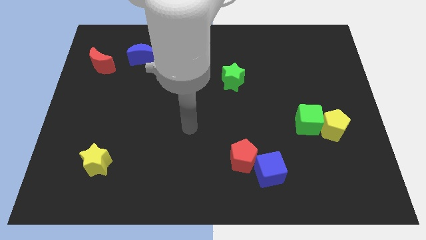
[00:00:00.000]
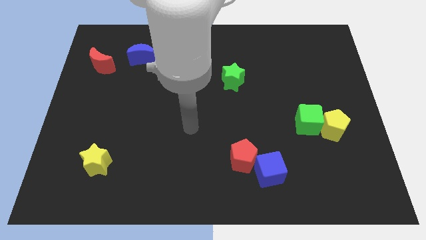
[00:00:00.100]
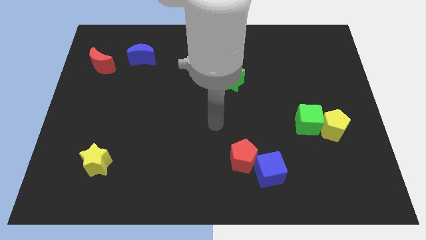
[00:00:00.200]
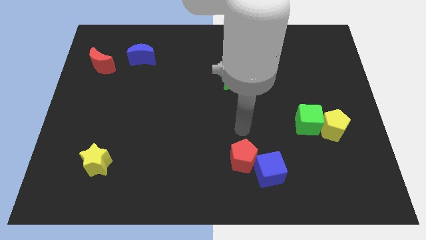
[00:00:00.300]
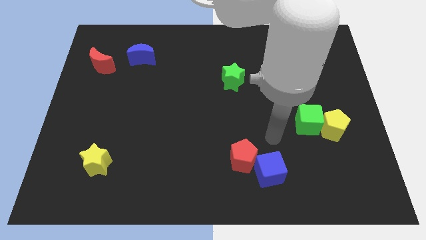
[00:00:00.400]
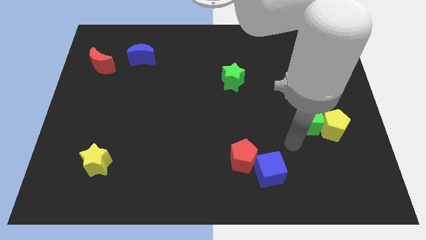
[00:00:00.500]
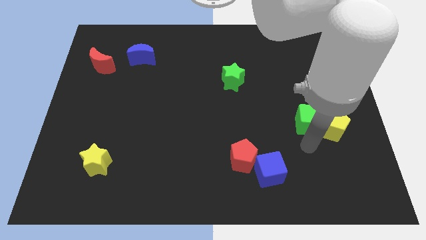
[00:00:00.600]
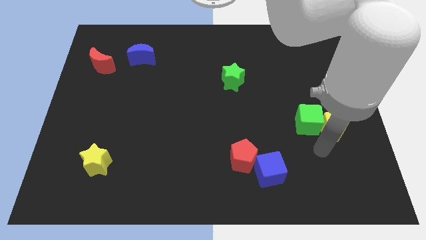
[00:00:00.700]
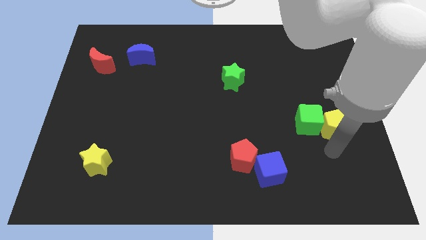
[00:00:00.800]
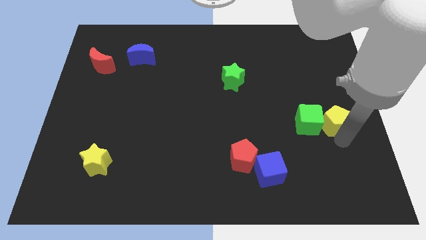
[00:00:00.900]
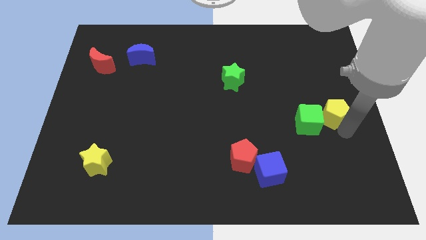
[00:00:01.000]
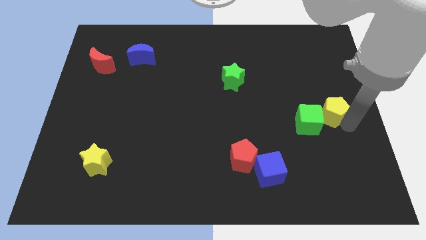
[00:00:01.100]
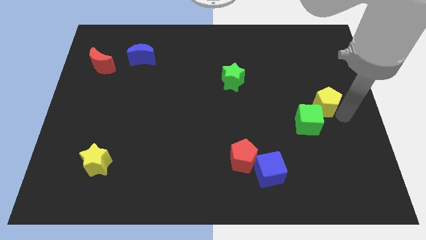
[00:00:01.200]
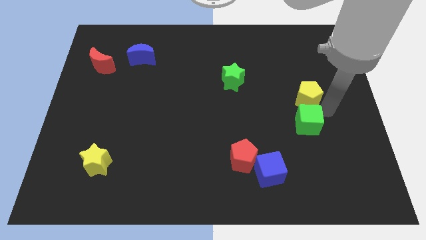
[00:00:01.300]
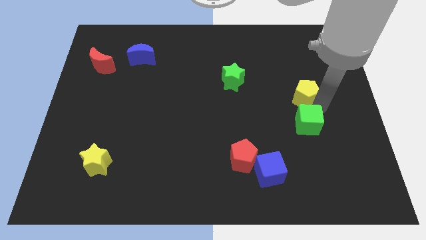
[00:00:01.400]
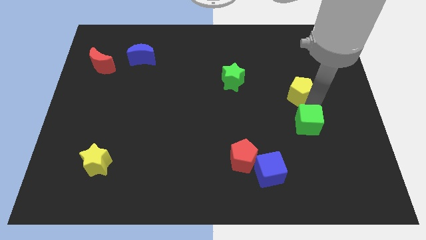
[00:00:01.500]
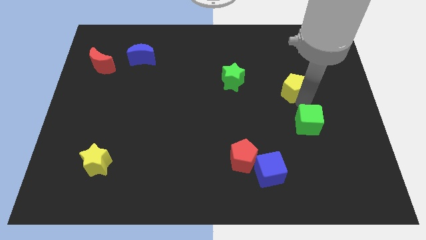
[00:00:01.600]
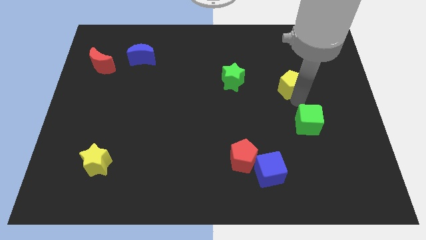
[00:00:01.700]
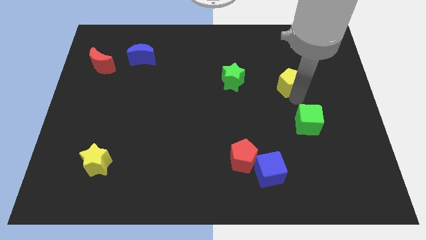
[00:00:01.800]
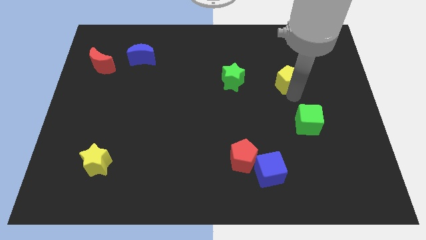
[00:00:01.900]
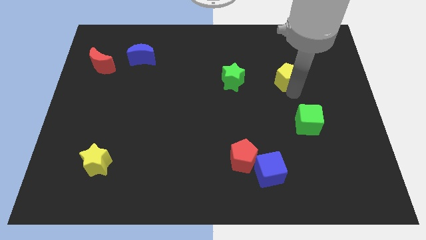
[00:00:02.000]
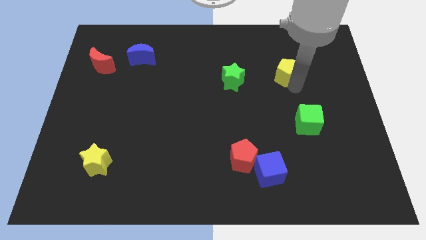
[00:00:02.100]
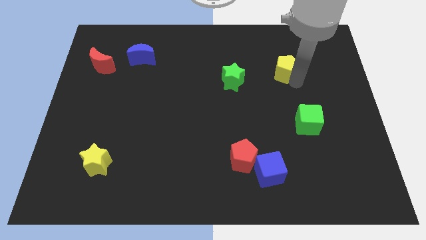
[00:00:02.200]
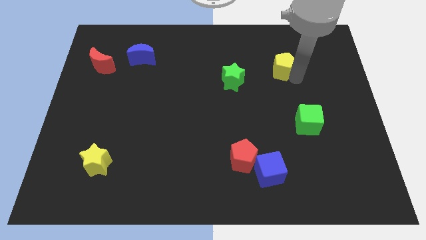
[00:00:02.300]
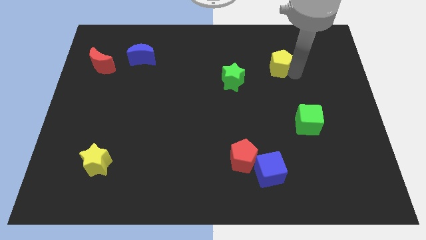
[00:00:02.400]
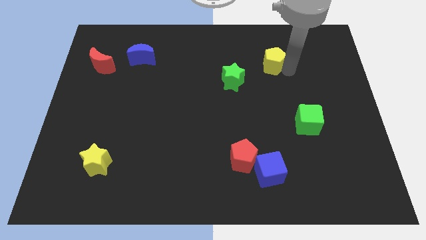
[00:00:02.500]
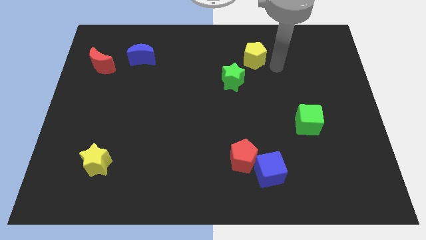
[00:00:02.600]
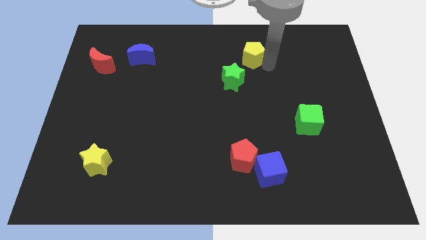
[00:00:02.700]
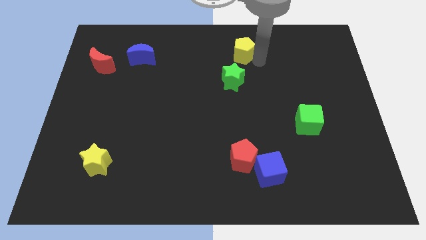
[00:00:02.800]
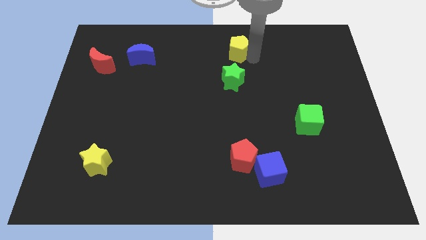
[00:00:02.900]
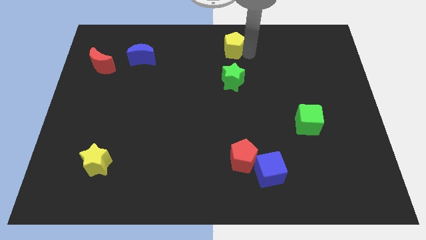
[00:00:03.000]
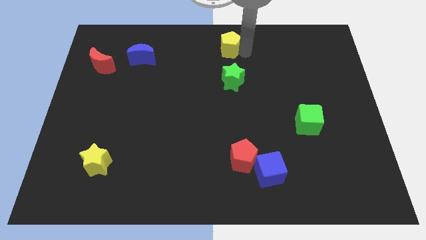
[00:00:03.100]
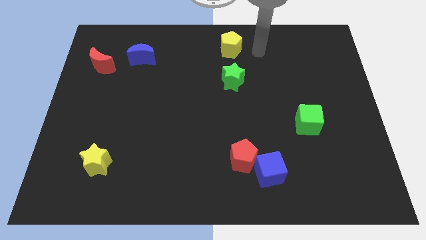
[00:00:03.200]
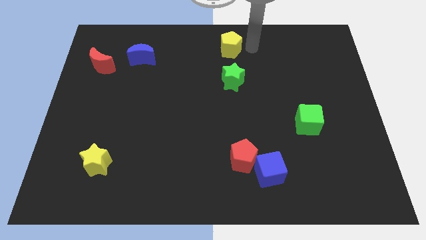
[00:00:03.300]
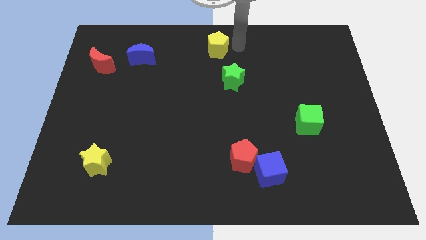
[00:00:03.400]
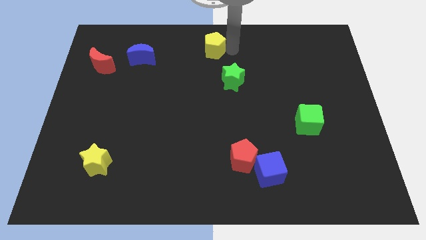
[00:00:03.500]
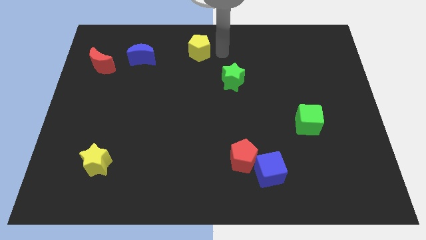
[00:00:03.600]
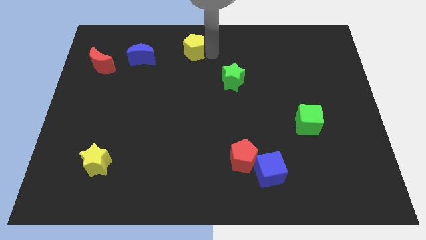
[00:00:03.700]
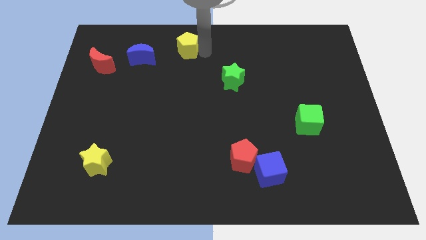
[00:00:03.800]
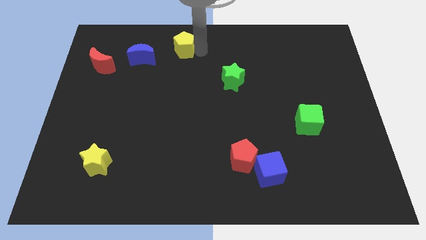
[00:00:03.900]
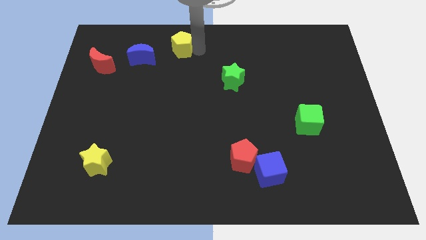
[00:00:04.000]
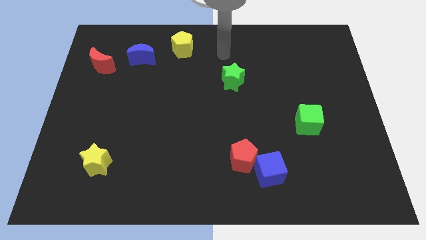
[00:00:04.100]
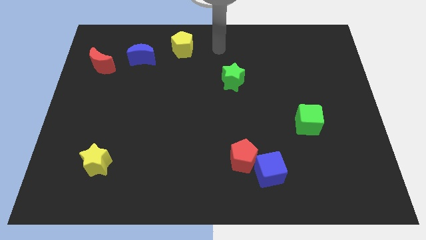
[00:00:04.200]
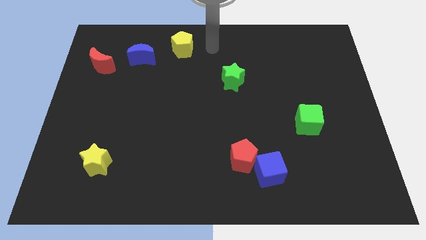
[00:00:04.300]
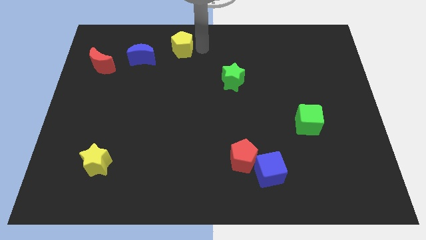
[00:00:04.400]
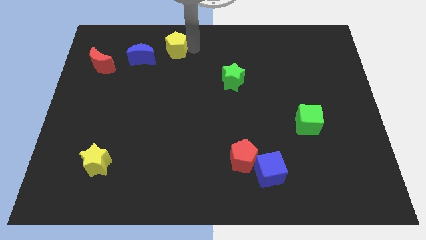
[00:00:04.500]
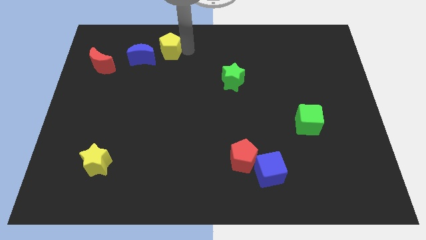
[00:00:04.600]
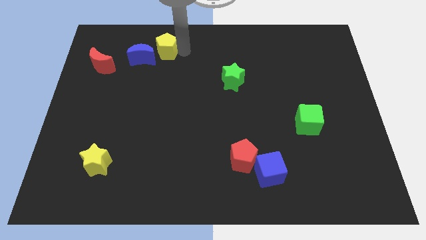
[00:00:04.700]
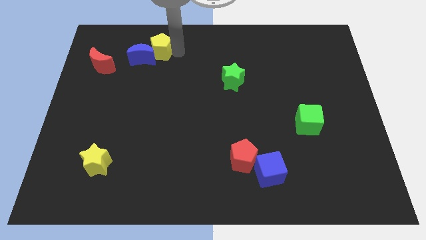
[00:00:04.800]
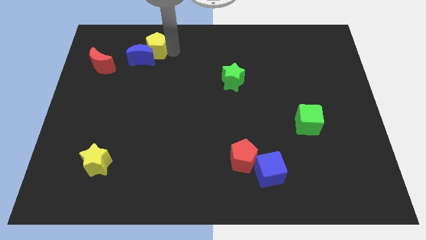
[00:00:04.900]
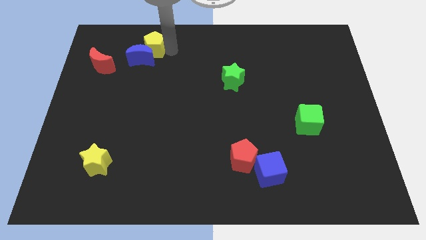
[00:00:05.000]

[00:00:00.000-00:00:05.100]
move the yellow pentagon next to the blue moon

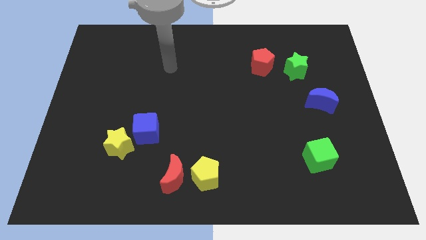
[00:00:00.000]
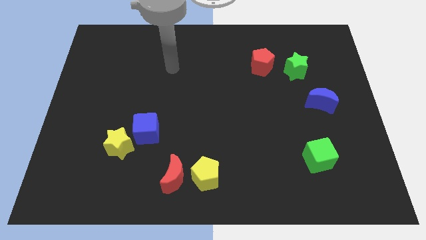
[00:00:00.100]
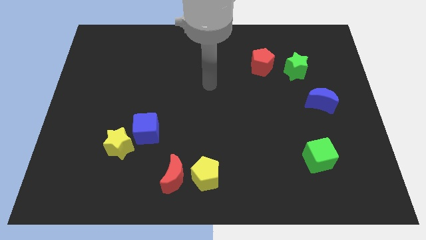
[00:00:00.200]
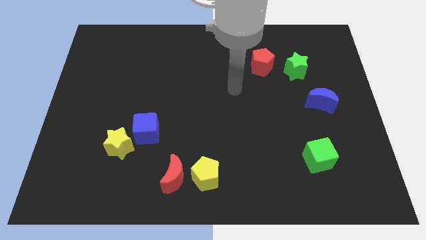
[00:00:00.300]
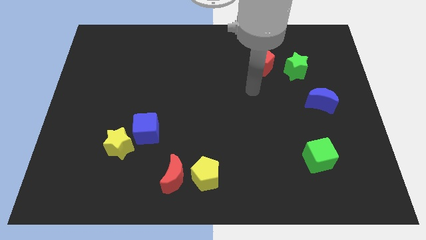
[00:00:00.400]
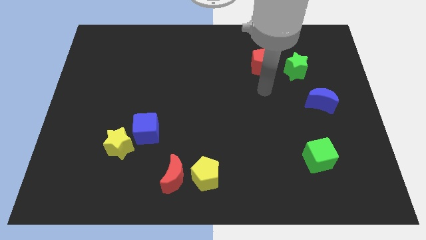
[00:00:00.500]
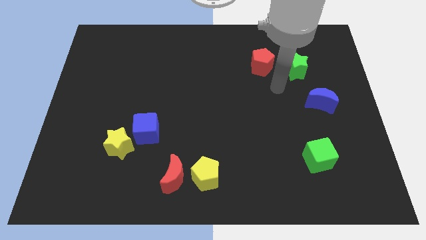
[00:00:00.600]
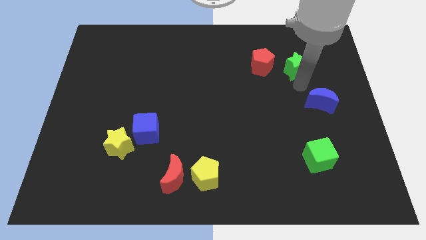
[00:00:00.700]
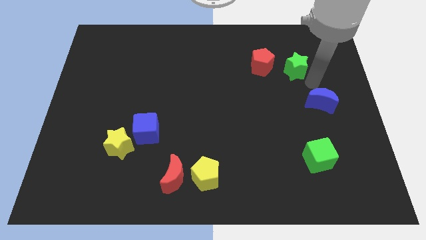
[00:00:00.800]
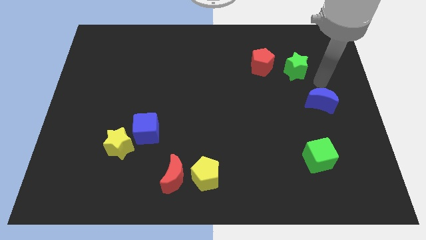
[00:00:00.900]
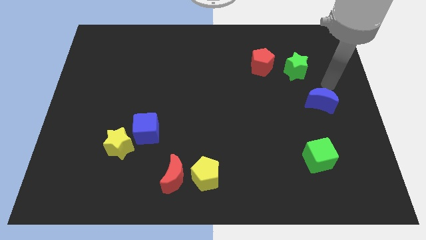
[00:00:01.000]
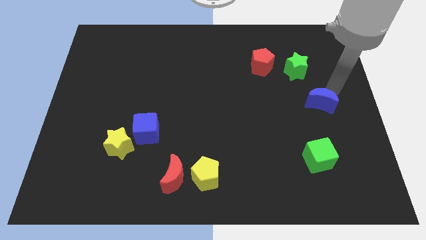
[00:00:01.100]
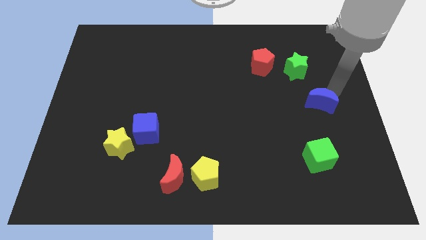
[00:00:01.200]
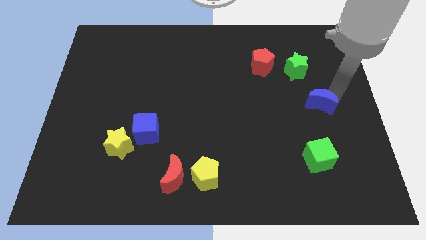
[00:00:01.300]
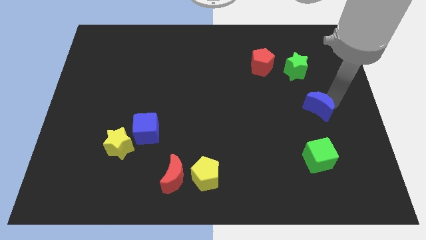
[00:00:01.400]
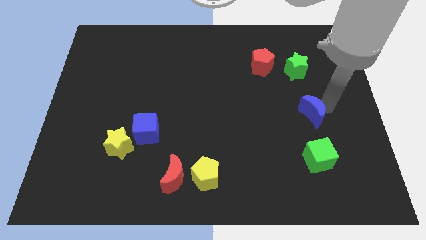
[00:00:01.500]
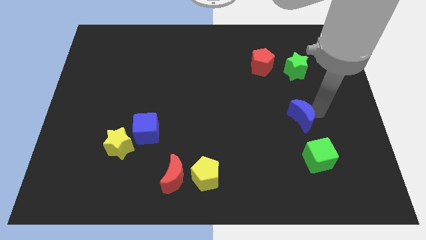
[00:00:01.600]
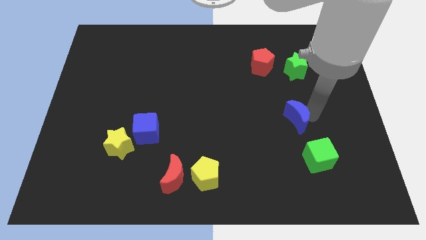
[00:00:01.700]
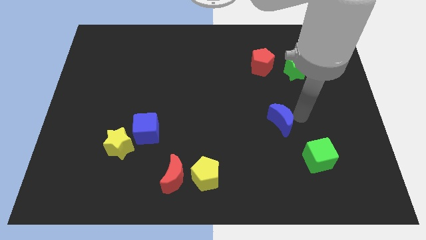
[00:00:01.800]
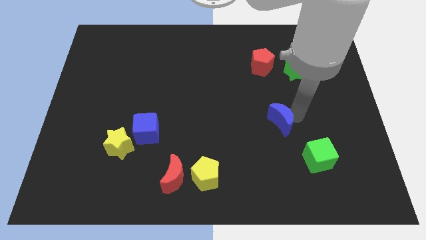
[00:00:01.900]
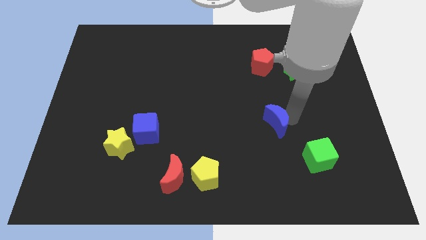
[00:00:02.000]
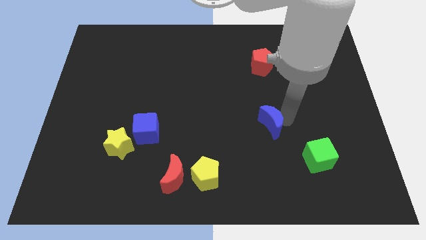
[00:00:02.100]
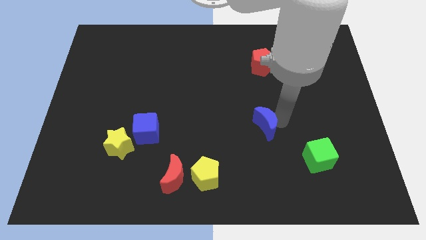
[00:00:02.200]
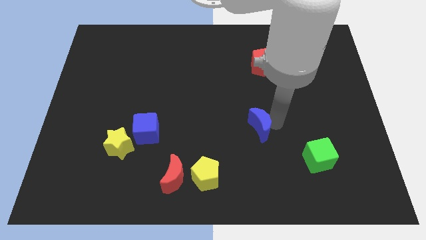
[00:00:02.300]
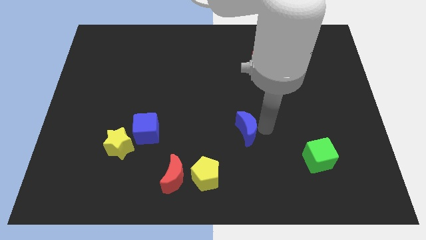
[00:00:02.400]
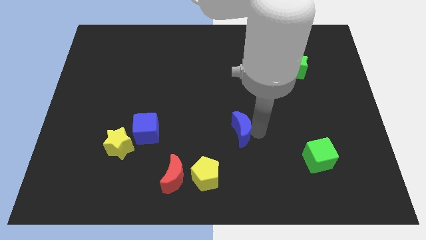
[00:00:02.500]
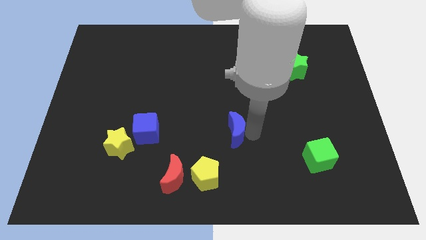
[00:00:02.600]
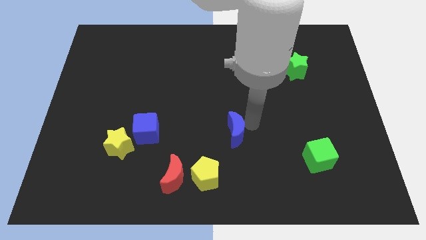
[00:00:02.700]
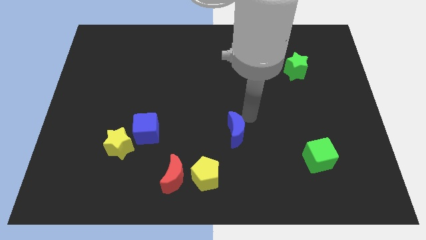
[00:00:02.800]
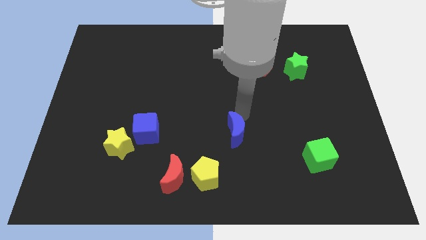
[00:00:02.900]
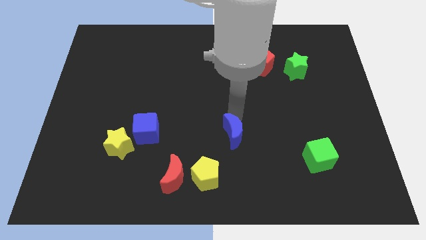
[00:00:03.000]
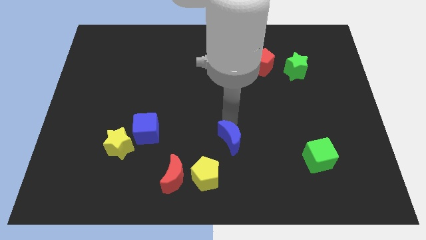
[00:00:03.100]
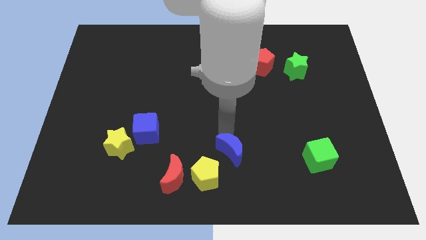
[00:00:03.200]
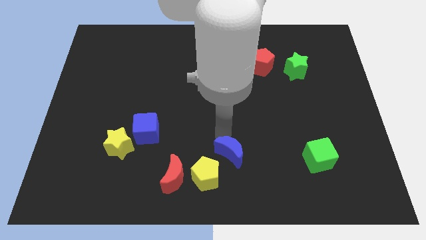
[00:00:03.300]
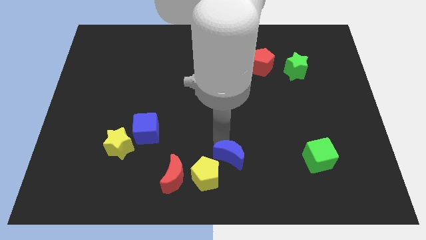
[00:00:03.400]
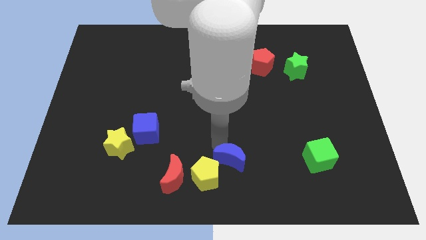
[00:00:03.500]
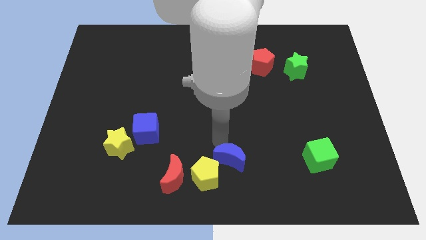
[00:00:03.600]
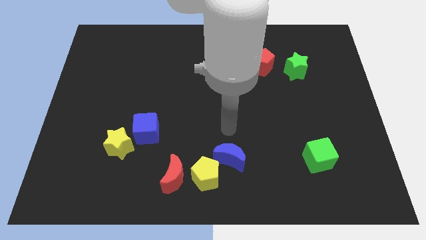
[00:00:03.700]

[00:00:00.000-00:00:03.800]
put the blue moon next to the yellow pentagon
